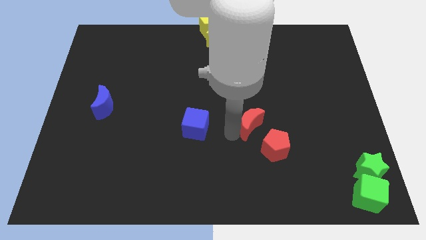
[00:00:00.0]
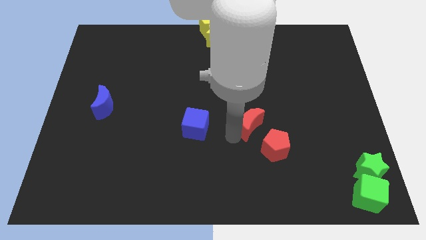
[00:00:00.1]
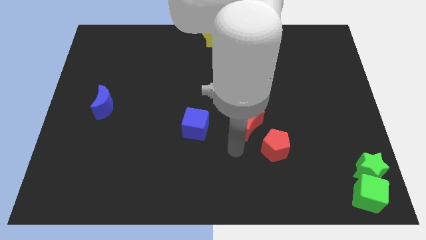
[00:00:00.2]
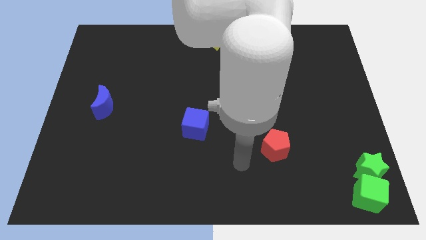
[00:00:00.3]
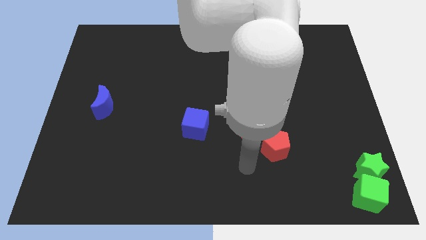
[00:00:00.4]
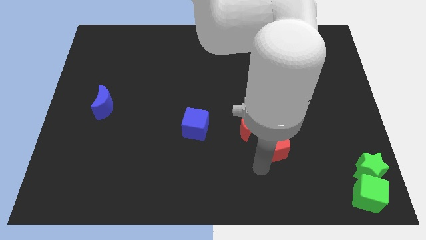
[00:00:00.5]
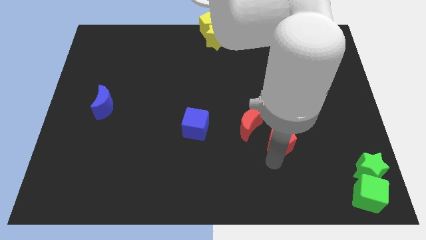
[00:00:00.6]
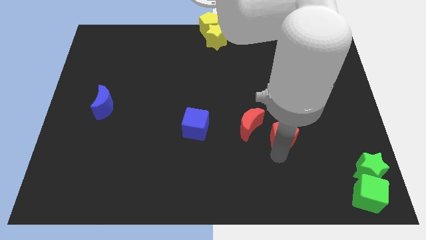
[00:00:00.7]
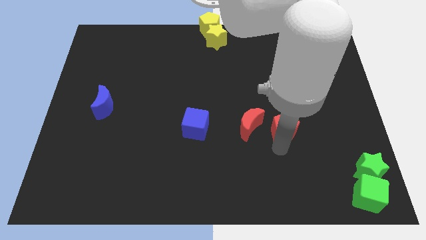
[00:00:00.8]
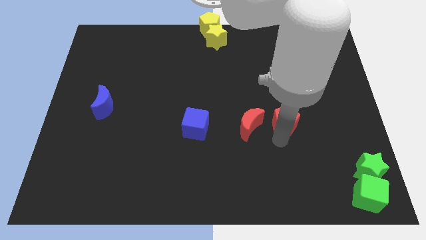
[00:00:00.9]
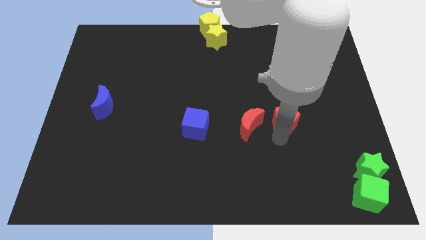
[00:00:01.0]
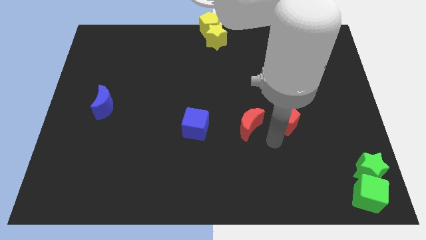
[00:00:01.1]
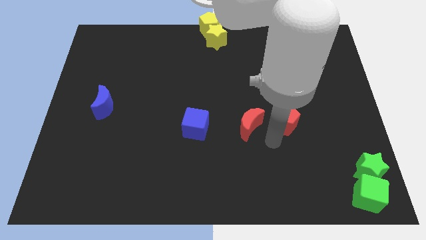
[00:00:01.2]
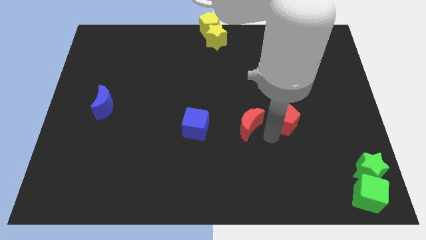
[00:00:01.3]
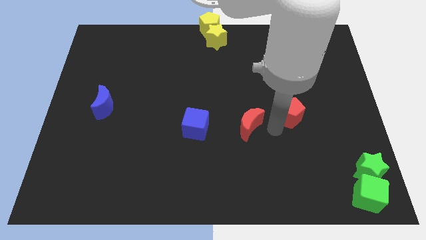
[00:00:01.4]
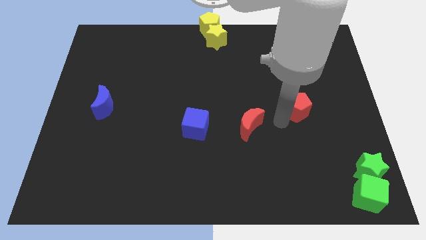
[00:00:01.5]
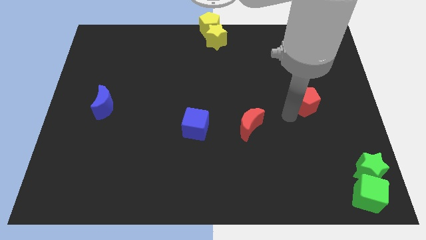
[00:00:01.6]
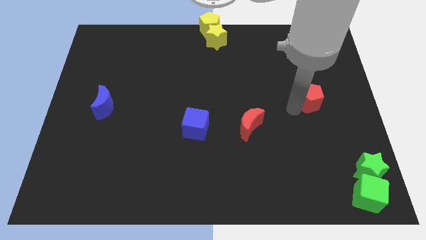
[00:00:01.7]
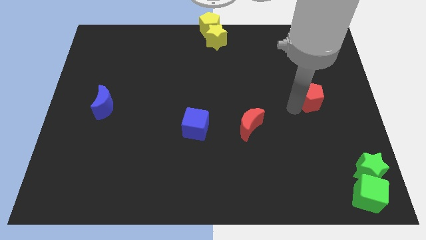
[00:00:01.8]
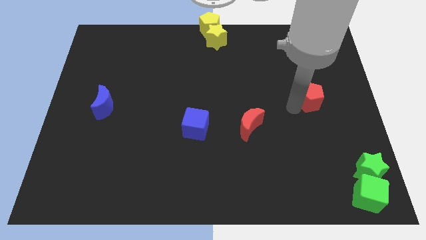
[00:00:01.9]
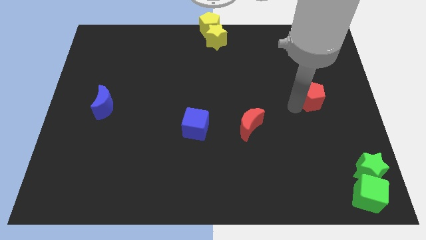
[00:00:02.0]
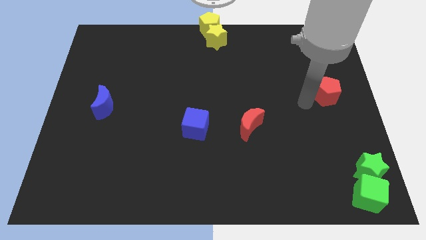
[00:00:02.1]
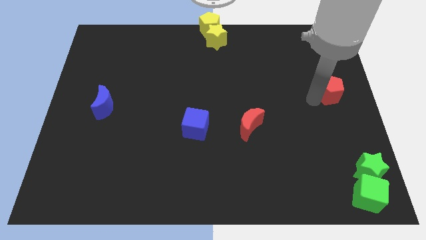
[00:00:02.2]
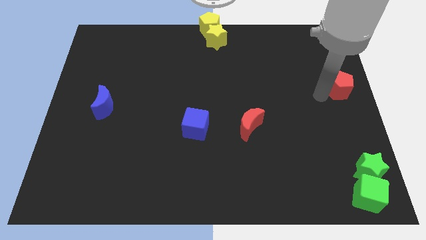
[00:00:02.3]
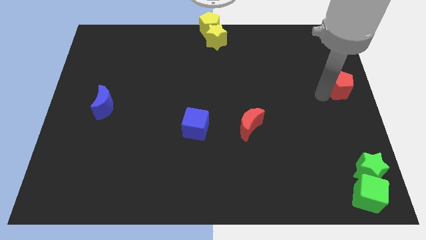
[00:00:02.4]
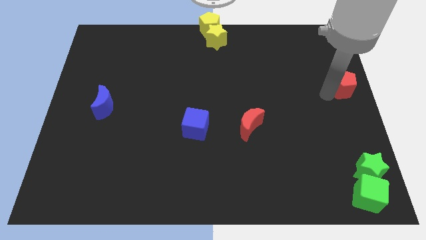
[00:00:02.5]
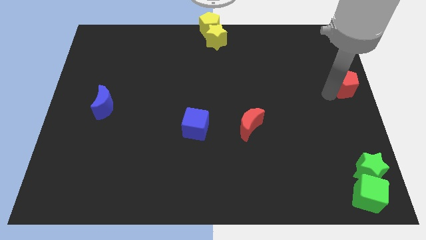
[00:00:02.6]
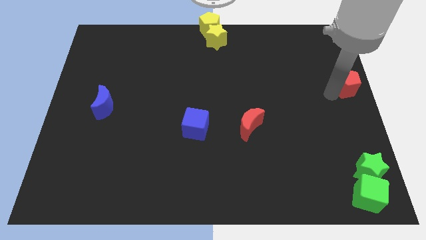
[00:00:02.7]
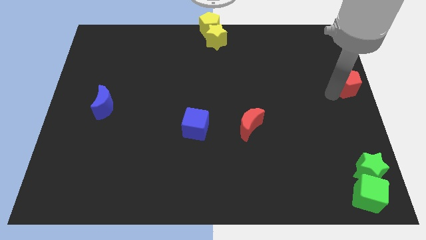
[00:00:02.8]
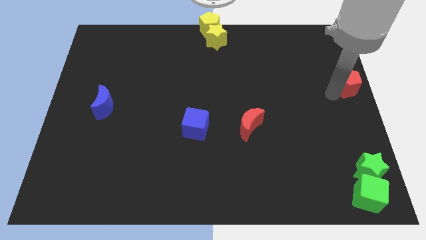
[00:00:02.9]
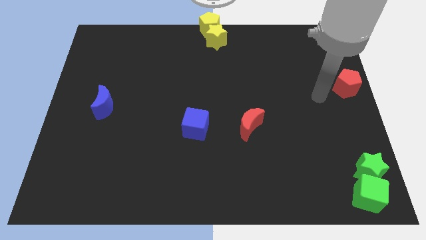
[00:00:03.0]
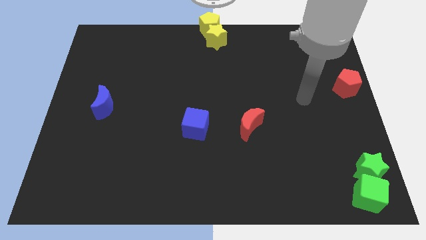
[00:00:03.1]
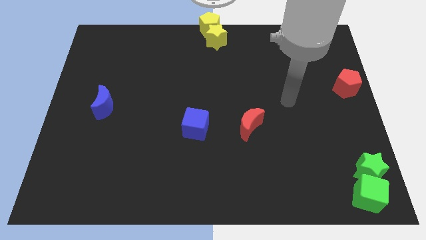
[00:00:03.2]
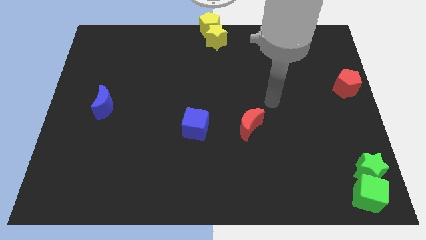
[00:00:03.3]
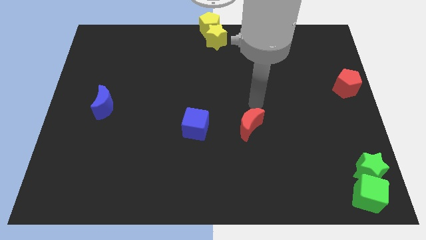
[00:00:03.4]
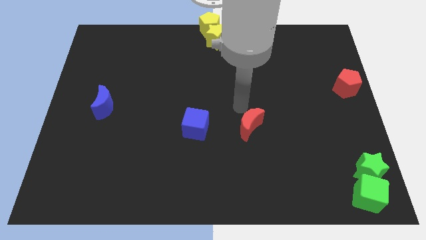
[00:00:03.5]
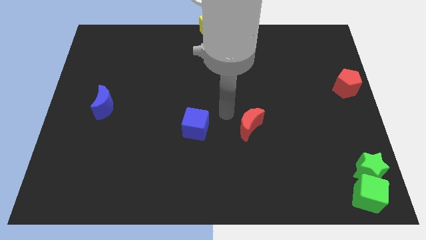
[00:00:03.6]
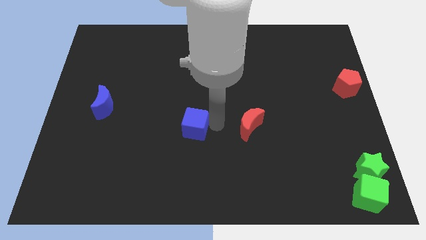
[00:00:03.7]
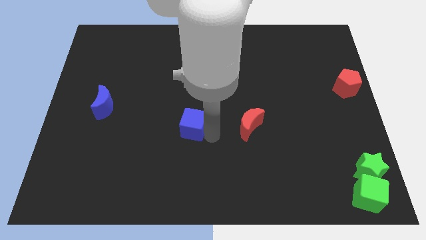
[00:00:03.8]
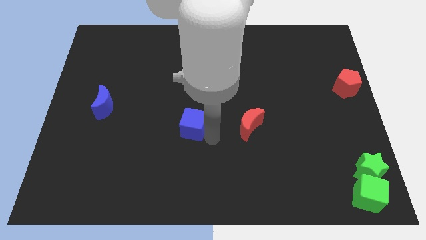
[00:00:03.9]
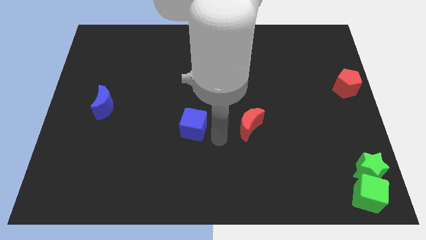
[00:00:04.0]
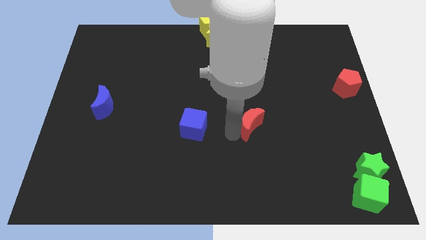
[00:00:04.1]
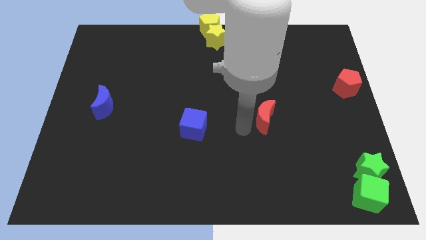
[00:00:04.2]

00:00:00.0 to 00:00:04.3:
place the red pentagon towards right center of the board

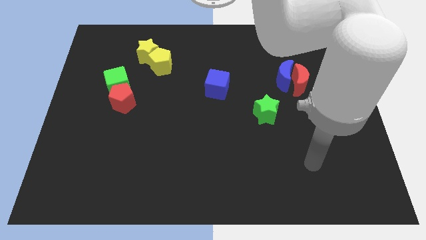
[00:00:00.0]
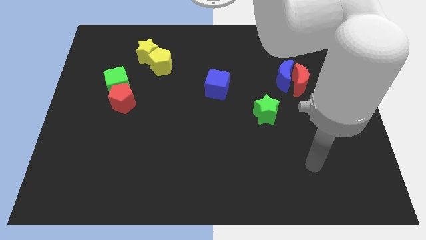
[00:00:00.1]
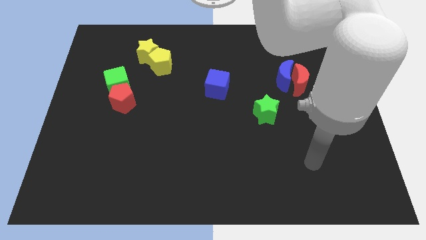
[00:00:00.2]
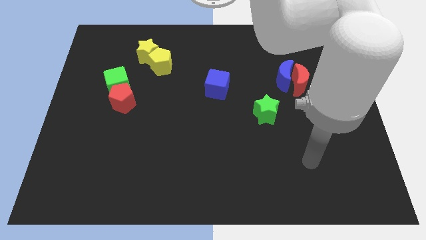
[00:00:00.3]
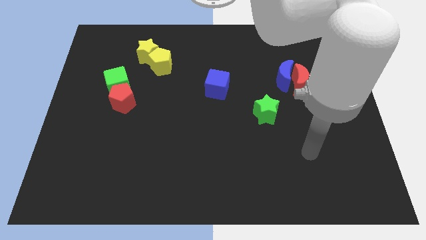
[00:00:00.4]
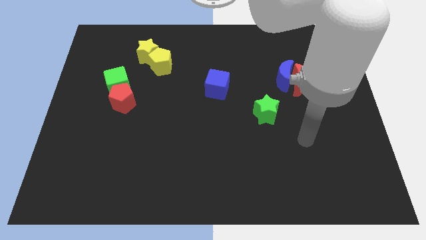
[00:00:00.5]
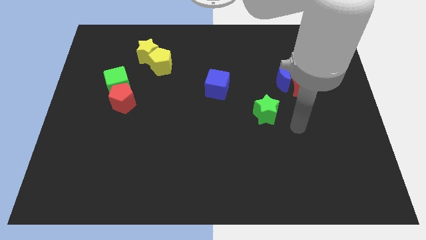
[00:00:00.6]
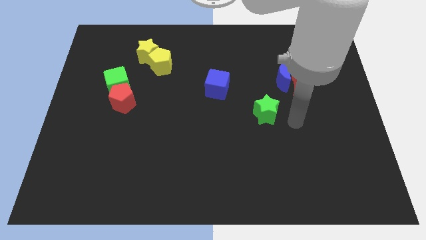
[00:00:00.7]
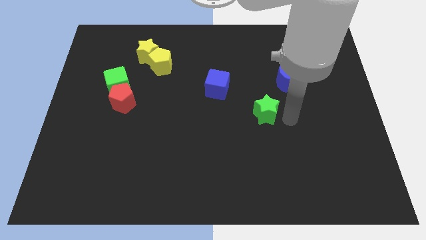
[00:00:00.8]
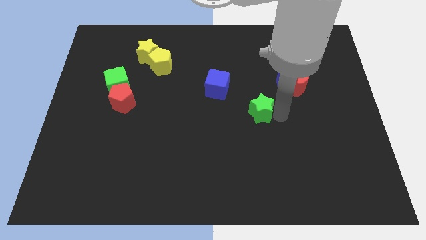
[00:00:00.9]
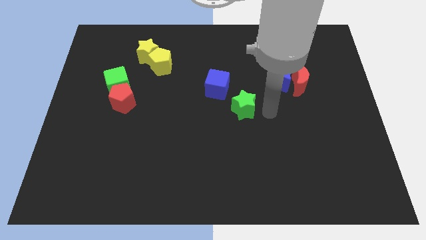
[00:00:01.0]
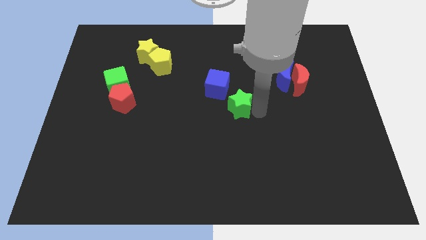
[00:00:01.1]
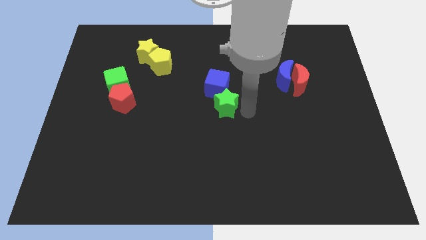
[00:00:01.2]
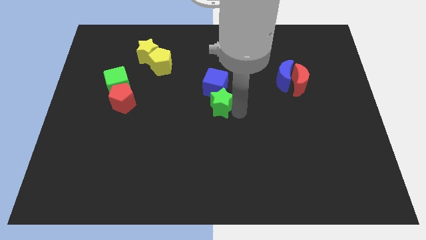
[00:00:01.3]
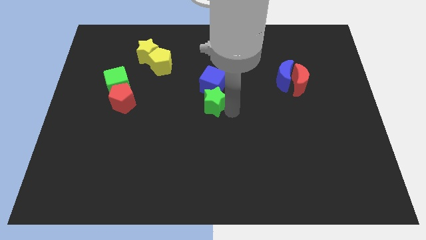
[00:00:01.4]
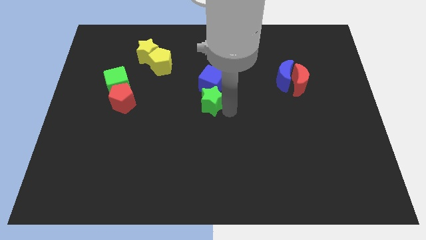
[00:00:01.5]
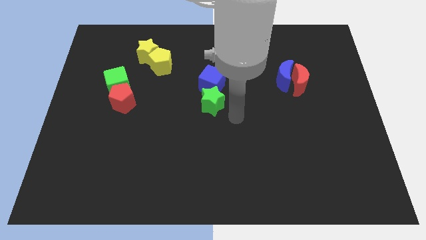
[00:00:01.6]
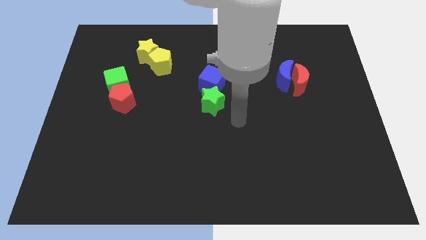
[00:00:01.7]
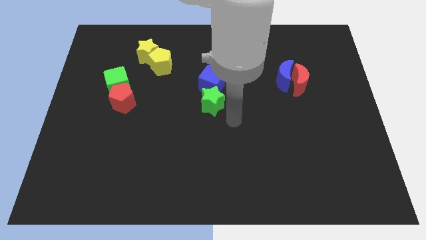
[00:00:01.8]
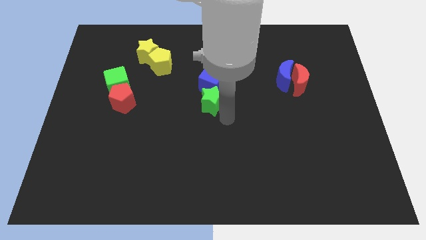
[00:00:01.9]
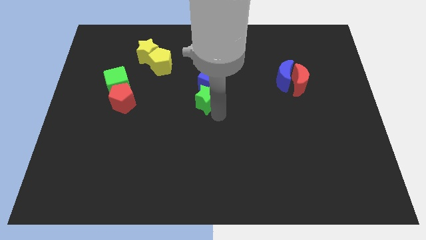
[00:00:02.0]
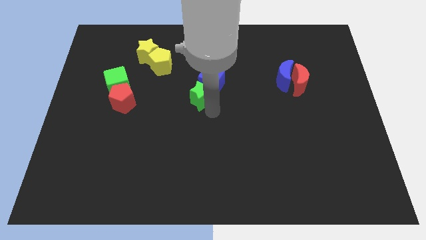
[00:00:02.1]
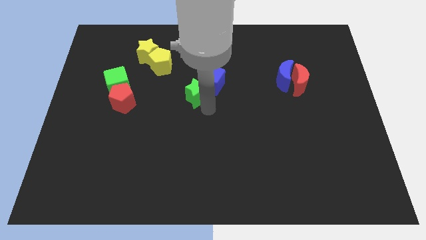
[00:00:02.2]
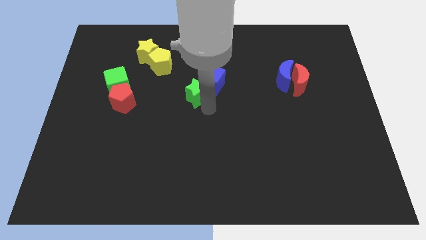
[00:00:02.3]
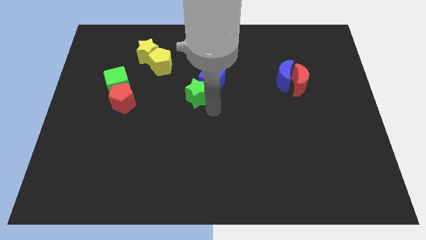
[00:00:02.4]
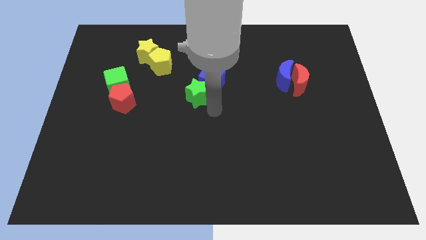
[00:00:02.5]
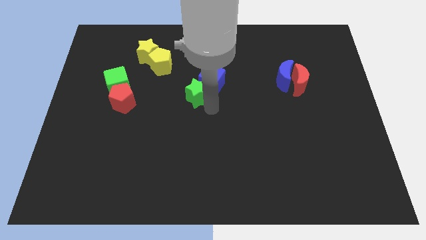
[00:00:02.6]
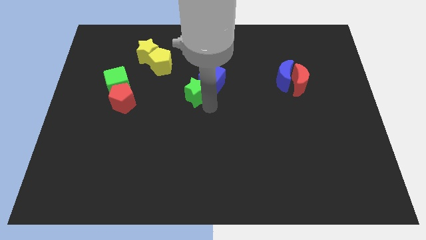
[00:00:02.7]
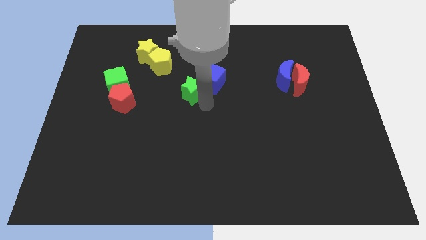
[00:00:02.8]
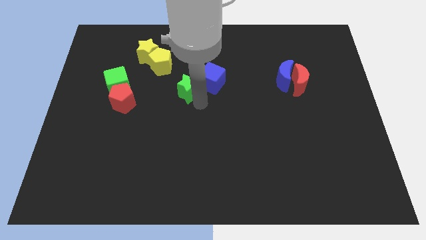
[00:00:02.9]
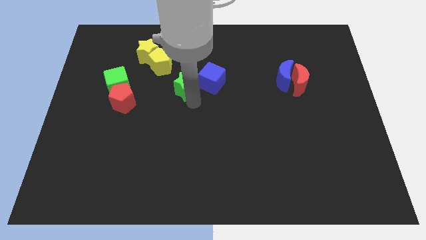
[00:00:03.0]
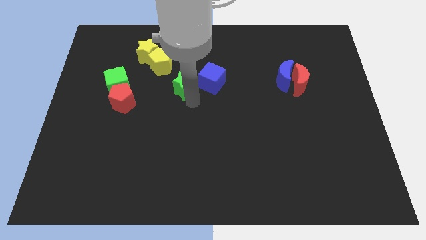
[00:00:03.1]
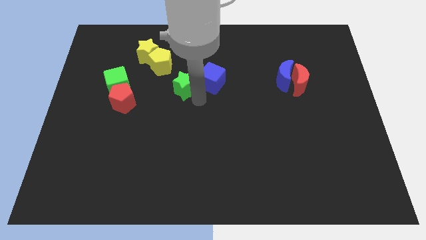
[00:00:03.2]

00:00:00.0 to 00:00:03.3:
move the green star to the left of the blue cube

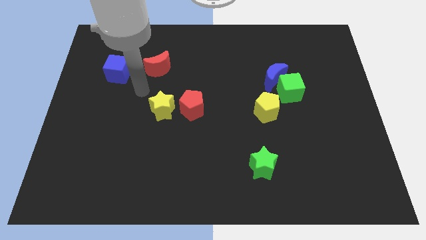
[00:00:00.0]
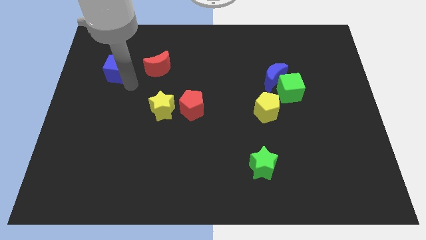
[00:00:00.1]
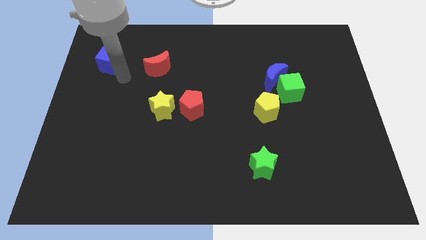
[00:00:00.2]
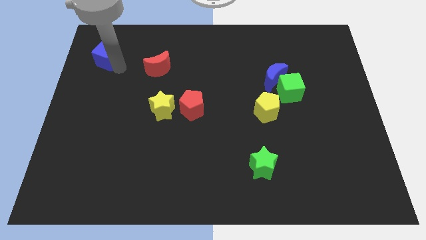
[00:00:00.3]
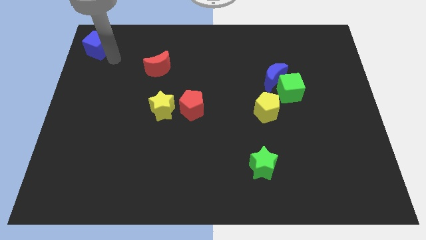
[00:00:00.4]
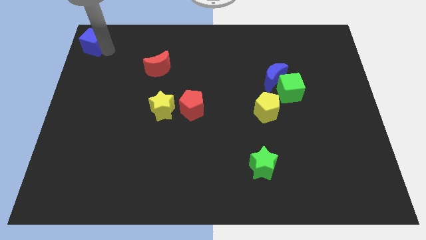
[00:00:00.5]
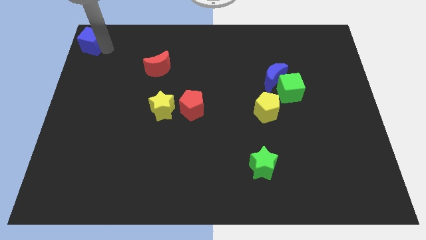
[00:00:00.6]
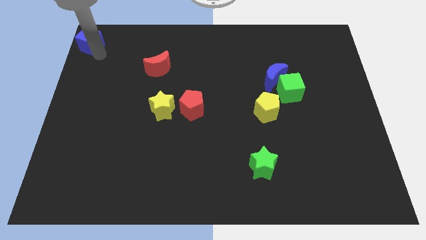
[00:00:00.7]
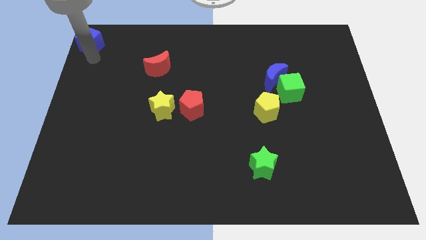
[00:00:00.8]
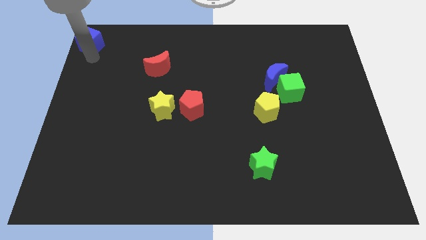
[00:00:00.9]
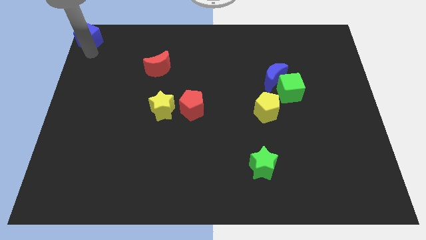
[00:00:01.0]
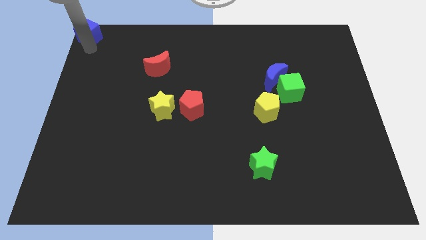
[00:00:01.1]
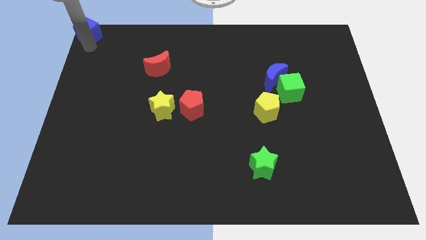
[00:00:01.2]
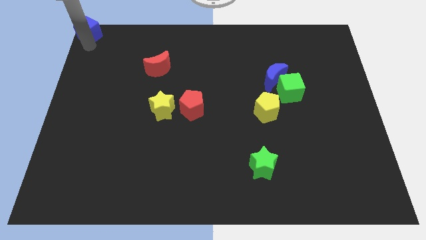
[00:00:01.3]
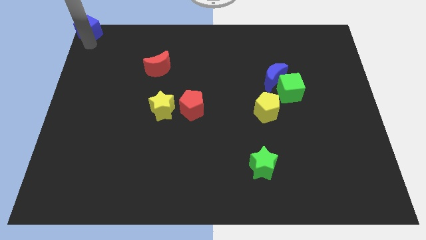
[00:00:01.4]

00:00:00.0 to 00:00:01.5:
put the blue cube at the top left corner of the board
